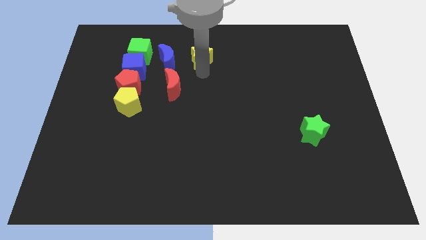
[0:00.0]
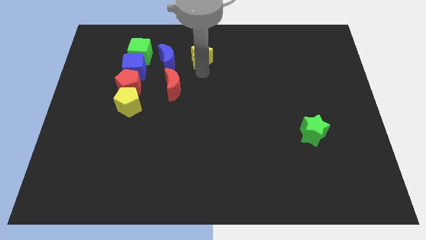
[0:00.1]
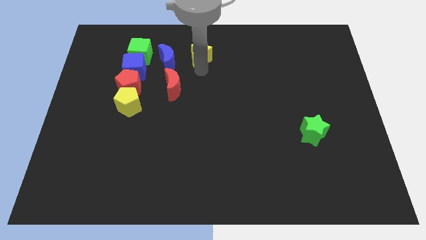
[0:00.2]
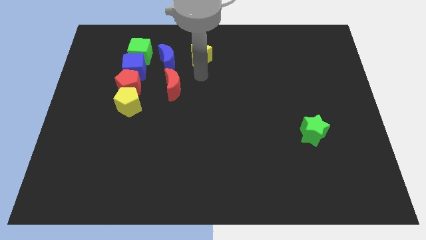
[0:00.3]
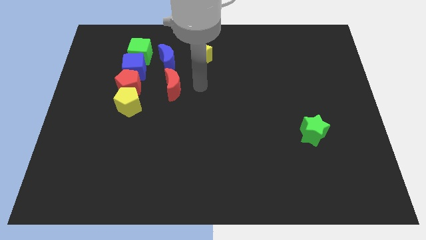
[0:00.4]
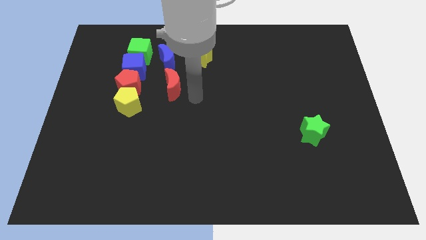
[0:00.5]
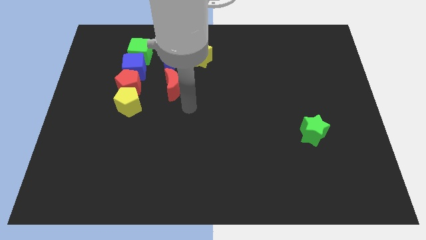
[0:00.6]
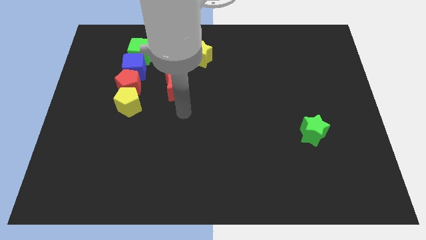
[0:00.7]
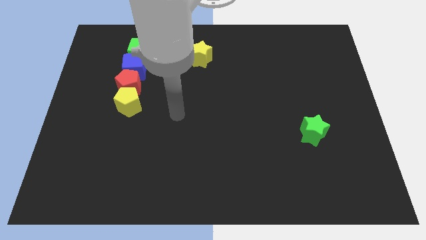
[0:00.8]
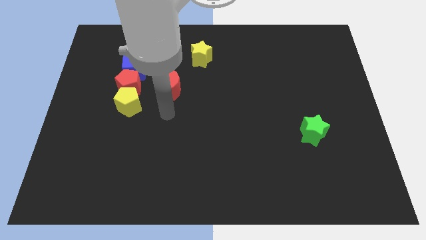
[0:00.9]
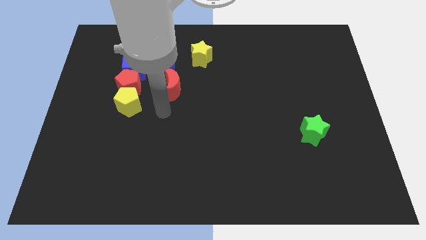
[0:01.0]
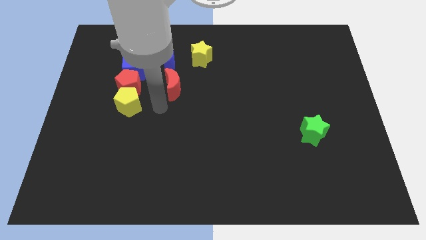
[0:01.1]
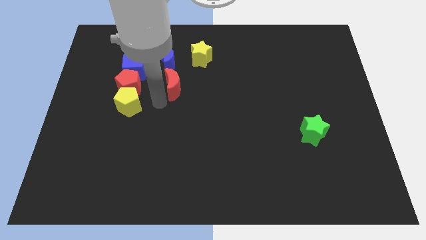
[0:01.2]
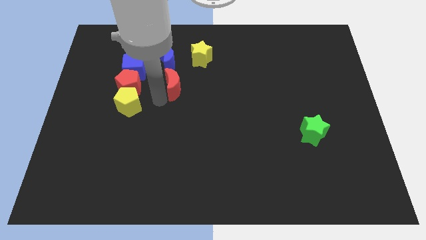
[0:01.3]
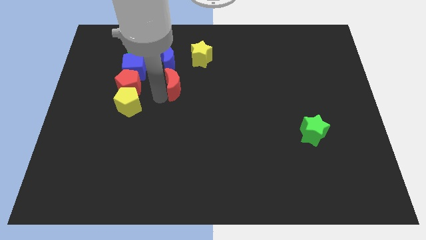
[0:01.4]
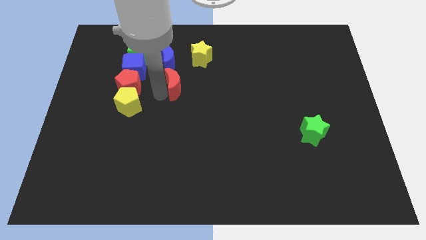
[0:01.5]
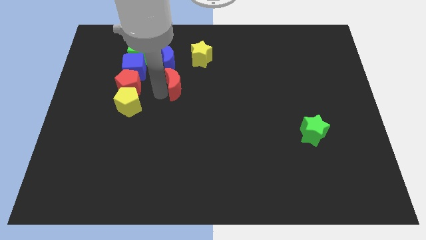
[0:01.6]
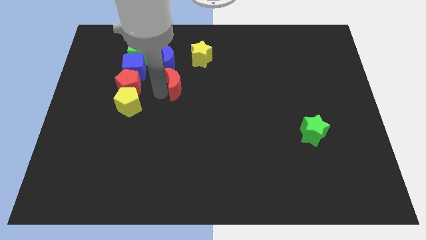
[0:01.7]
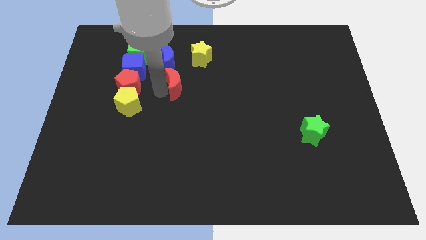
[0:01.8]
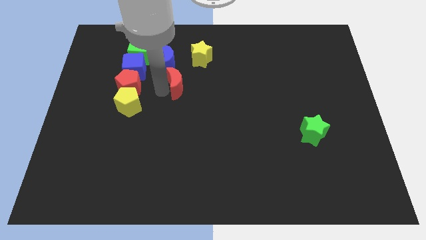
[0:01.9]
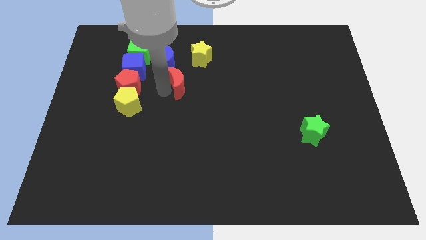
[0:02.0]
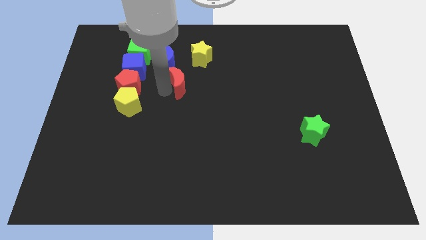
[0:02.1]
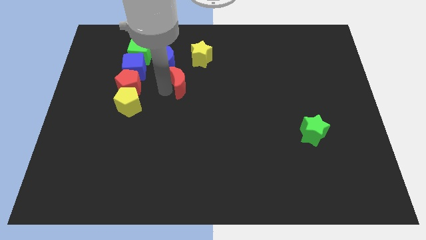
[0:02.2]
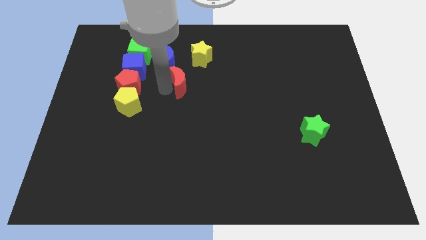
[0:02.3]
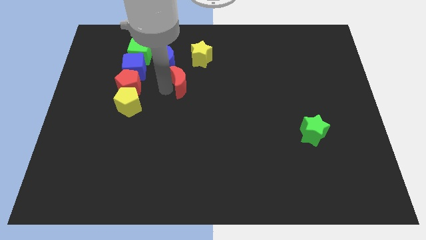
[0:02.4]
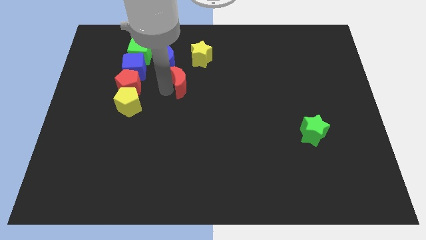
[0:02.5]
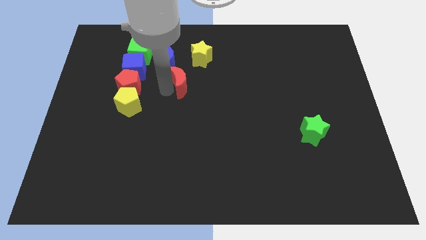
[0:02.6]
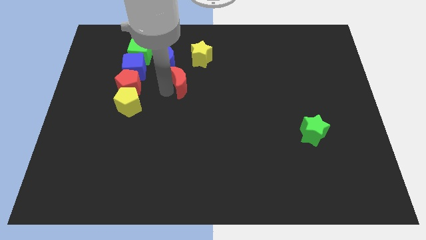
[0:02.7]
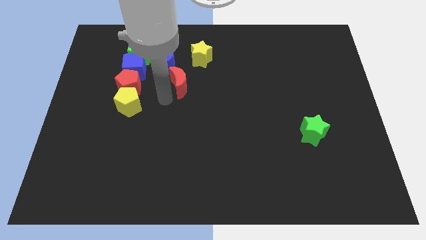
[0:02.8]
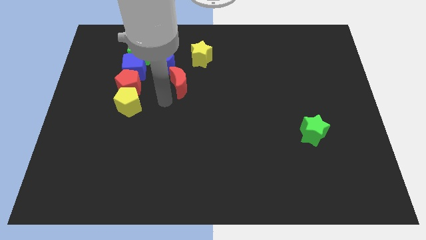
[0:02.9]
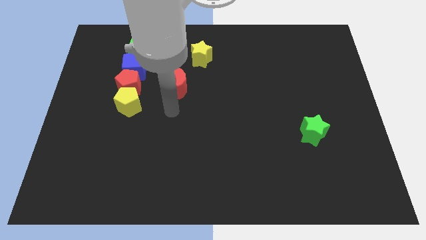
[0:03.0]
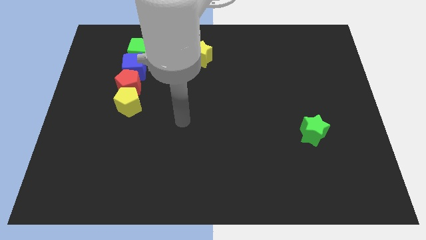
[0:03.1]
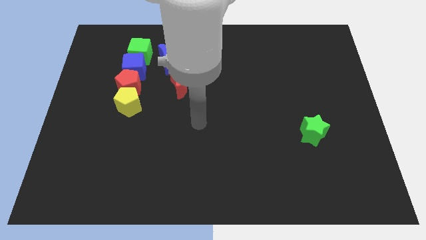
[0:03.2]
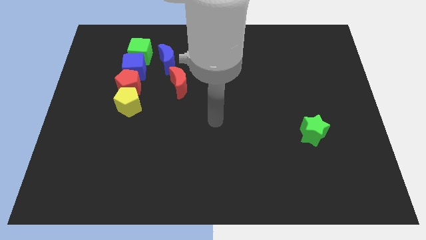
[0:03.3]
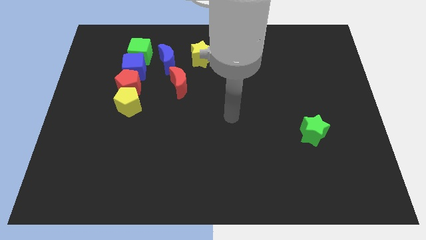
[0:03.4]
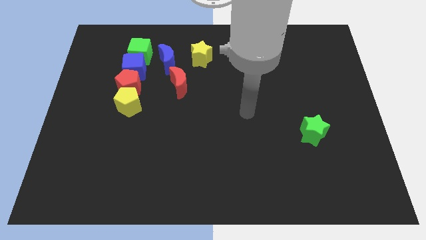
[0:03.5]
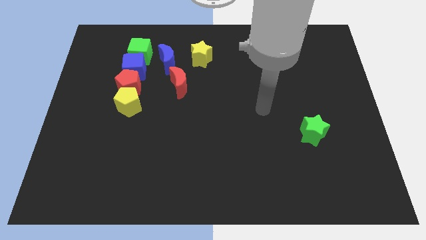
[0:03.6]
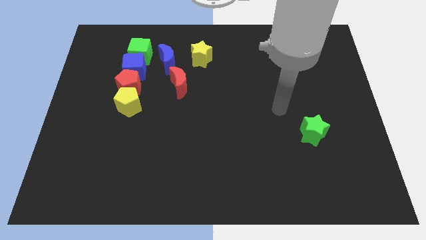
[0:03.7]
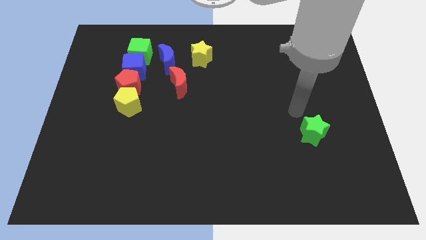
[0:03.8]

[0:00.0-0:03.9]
slightly move the red moon towards right

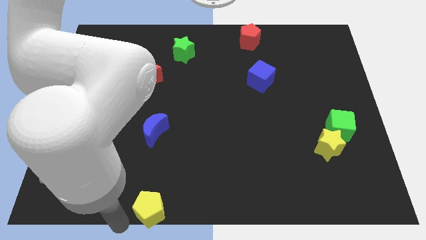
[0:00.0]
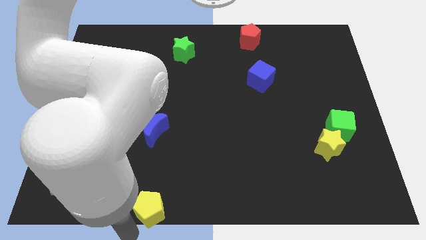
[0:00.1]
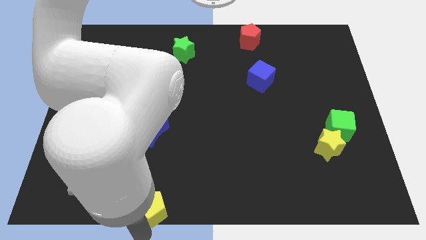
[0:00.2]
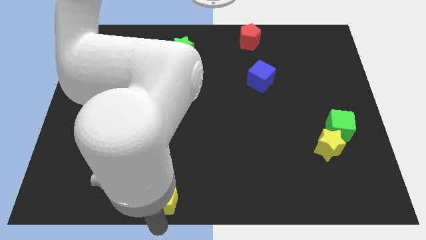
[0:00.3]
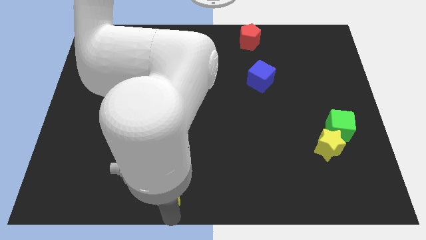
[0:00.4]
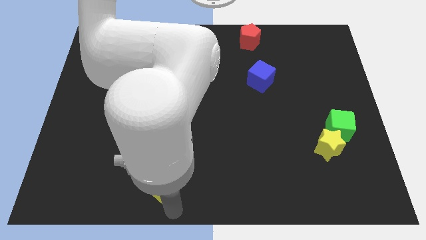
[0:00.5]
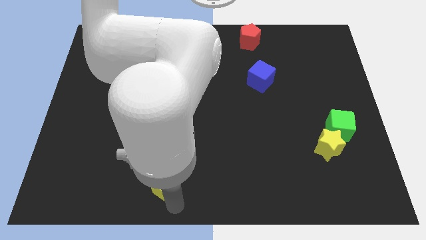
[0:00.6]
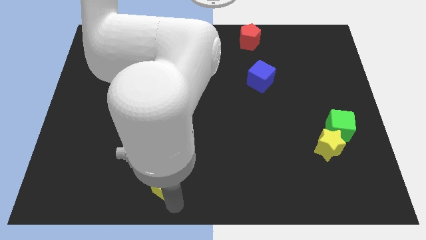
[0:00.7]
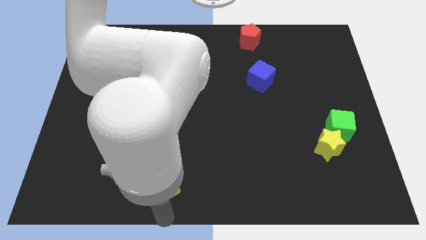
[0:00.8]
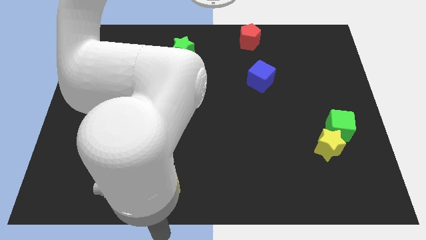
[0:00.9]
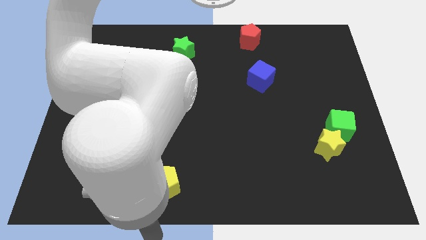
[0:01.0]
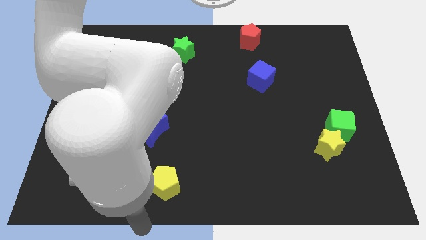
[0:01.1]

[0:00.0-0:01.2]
move the yellow pentagon slightly up

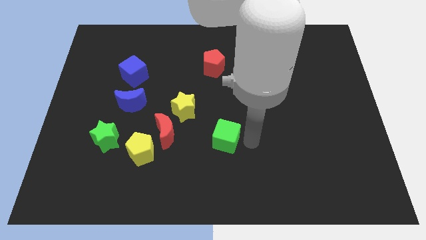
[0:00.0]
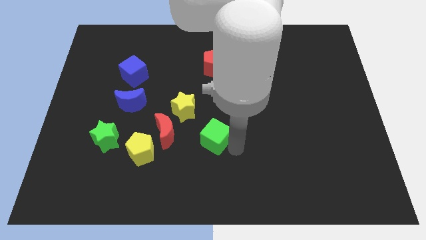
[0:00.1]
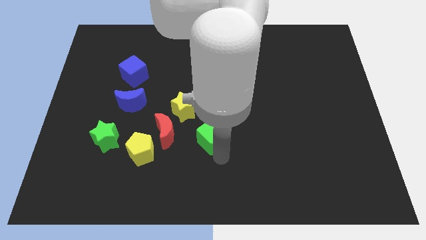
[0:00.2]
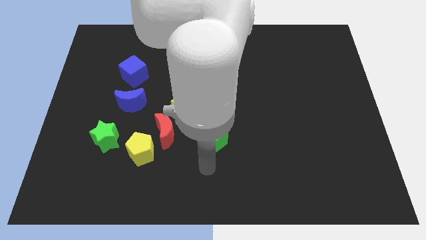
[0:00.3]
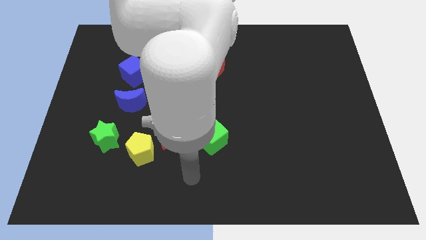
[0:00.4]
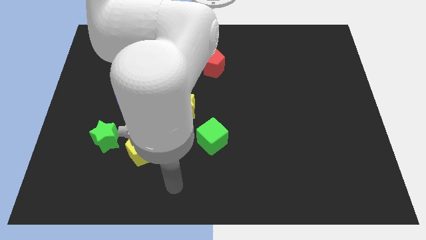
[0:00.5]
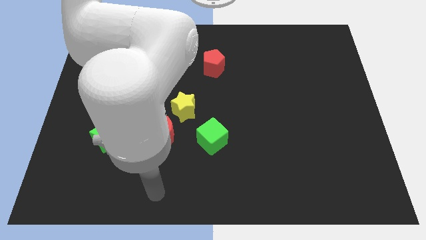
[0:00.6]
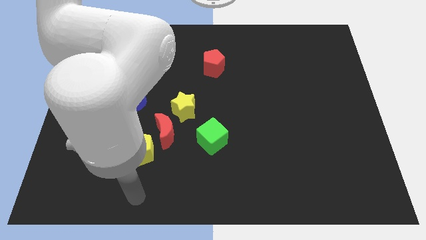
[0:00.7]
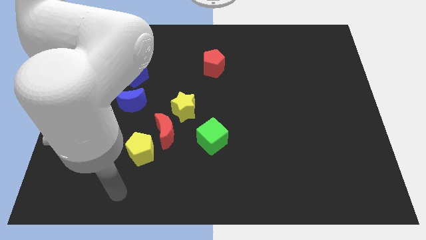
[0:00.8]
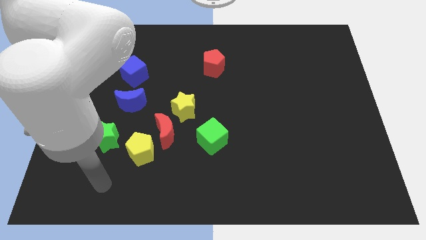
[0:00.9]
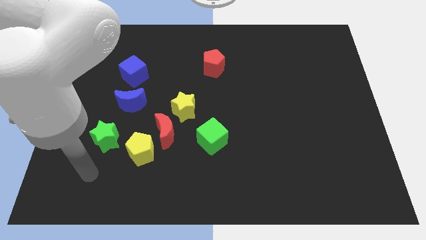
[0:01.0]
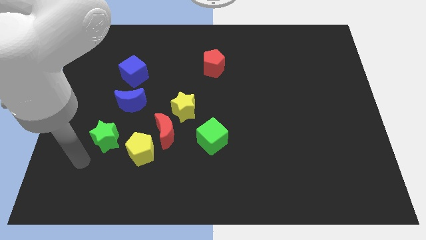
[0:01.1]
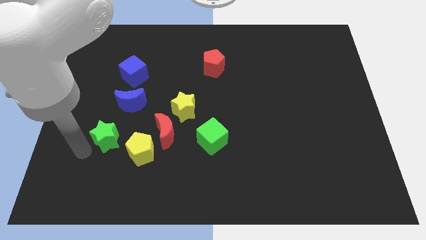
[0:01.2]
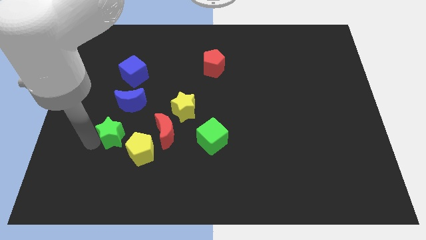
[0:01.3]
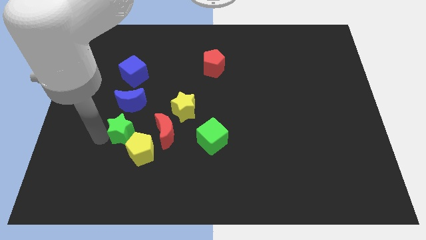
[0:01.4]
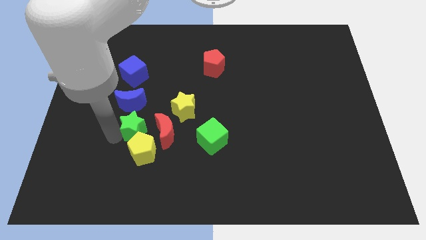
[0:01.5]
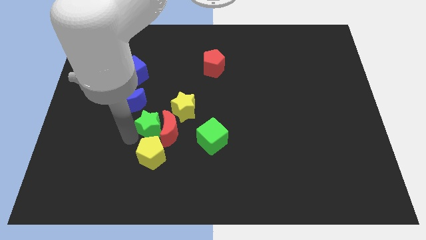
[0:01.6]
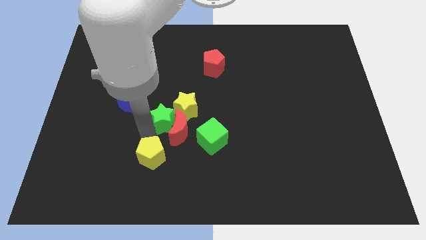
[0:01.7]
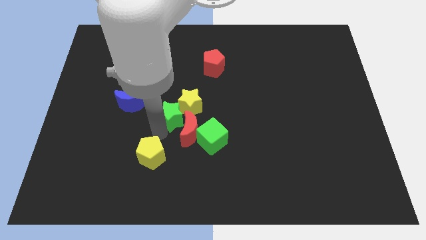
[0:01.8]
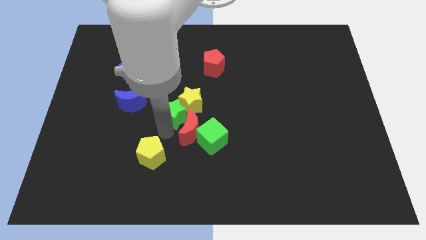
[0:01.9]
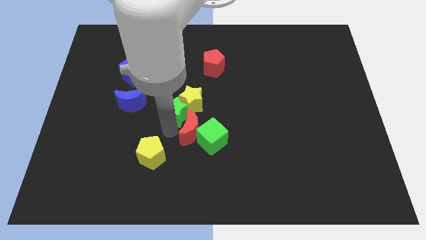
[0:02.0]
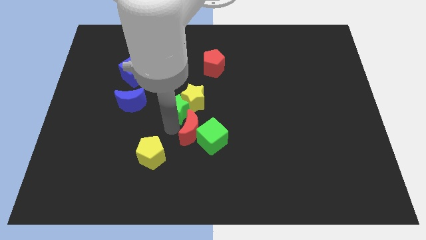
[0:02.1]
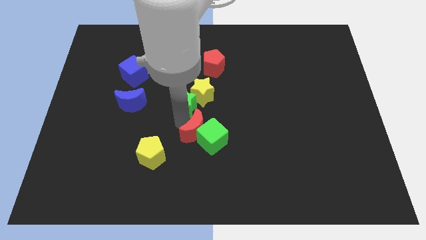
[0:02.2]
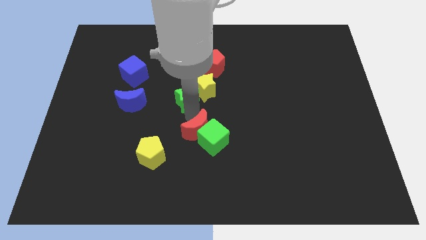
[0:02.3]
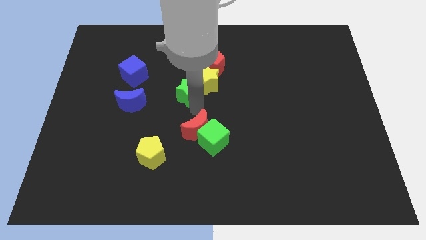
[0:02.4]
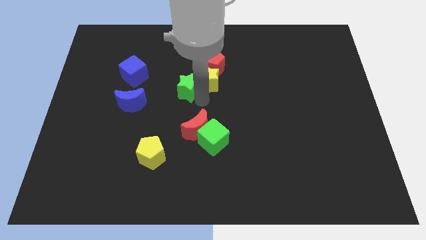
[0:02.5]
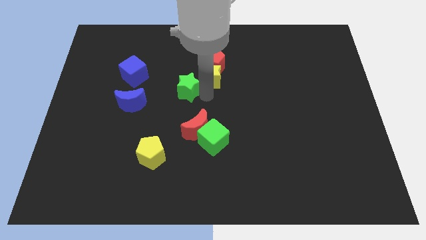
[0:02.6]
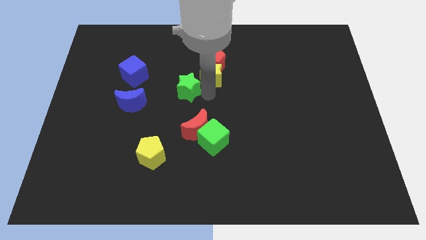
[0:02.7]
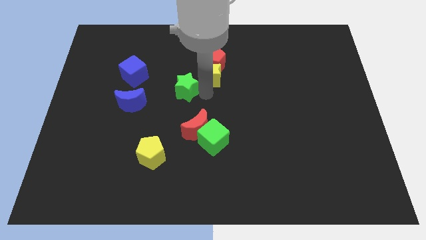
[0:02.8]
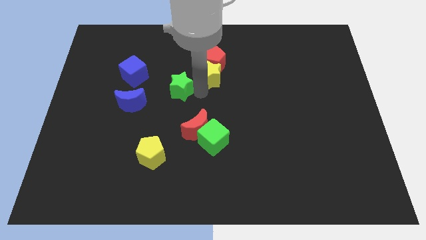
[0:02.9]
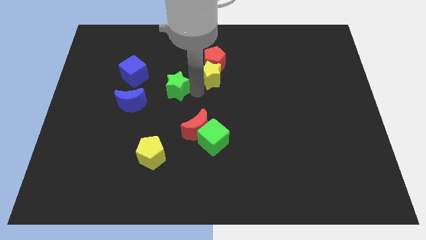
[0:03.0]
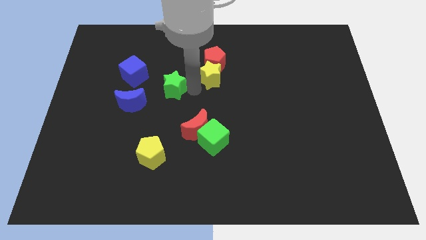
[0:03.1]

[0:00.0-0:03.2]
push a group of blocks upward

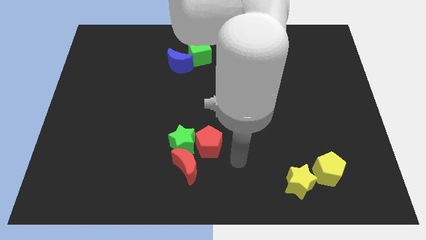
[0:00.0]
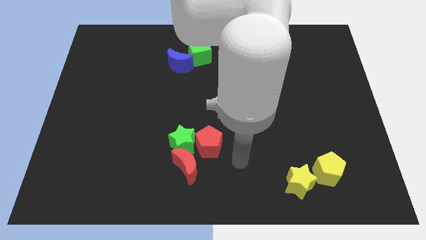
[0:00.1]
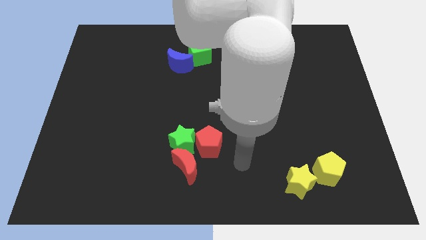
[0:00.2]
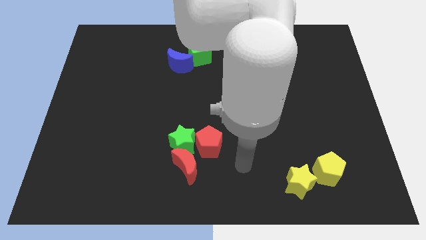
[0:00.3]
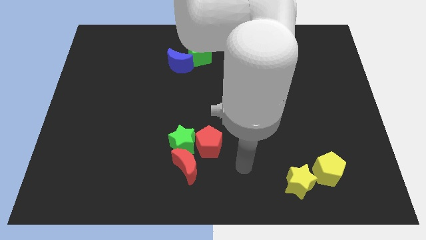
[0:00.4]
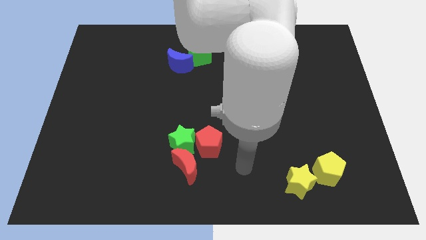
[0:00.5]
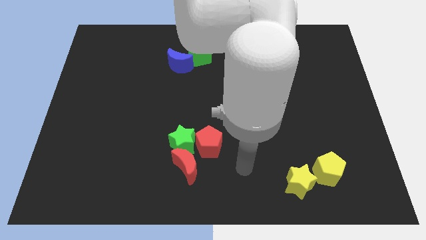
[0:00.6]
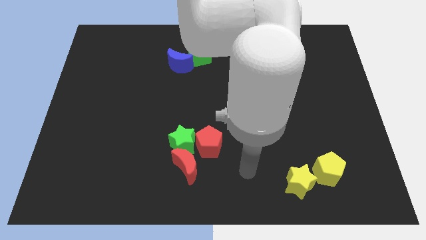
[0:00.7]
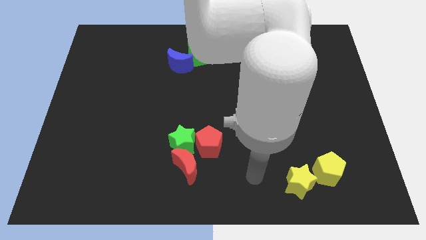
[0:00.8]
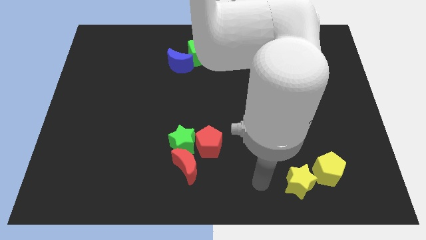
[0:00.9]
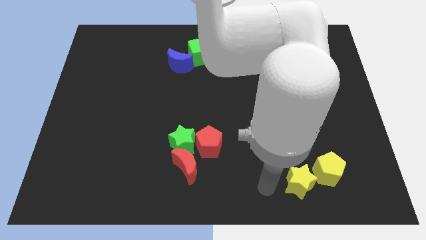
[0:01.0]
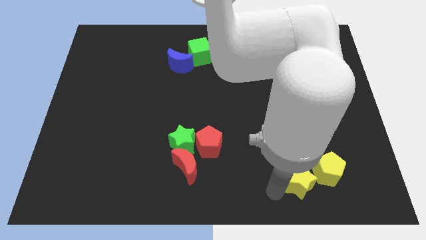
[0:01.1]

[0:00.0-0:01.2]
place your arm to the left of yellow star
